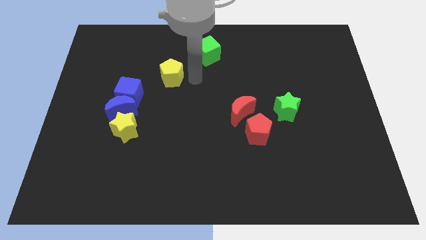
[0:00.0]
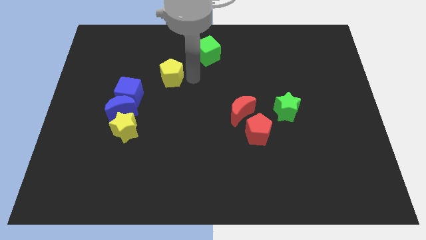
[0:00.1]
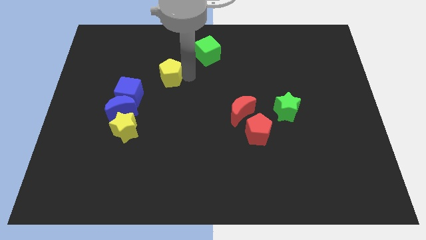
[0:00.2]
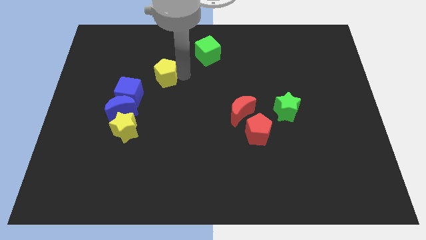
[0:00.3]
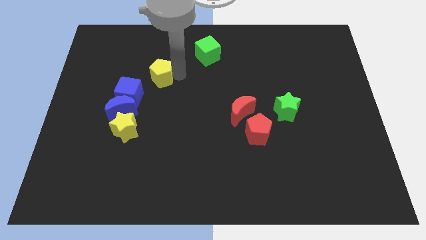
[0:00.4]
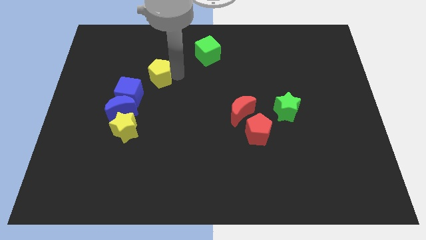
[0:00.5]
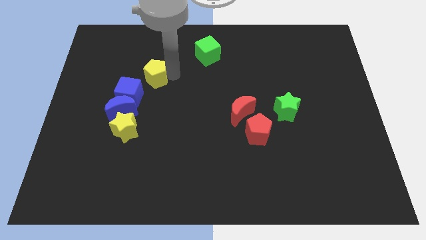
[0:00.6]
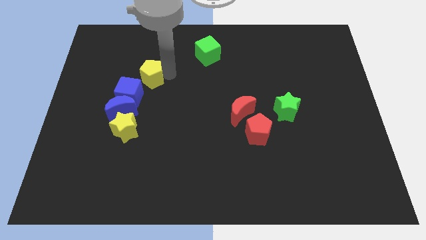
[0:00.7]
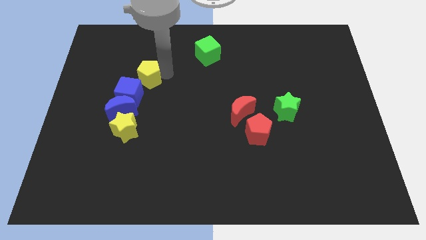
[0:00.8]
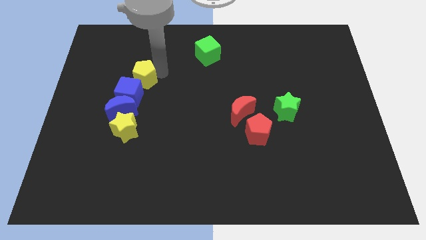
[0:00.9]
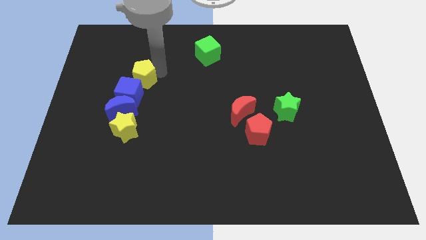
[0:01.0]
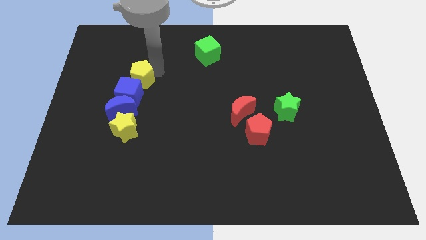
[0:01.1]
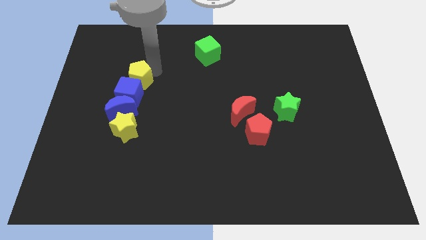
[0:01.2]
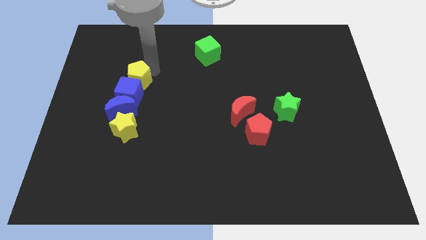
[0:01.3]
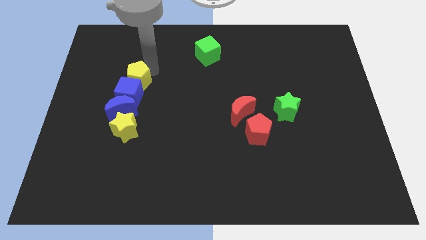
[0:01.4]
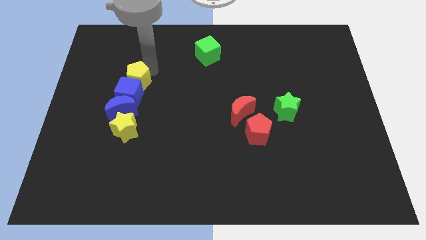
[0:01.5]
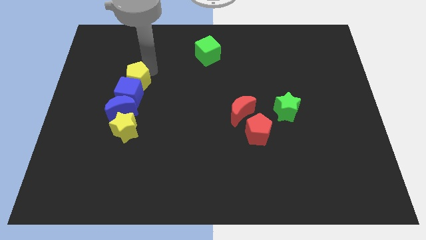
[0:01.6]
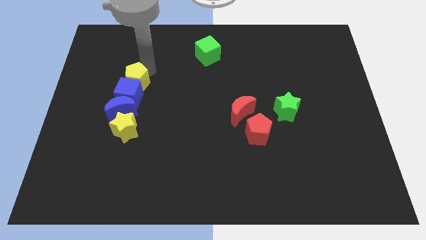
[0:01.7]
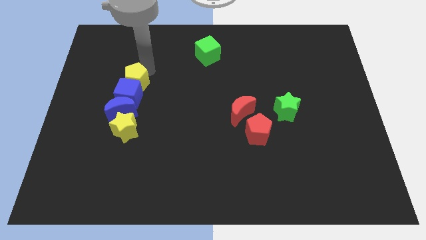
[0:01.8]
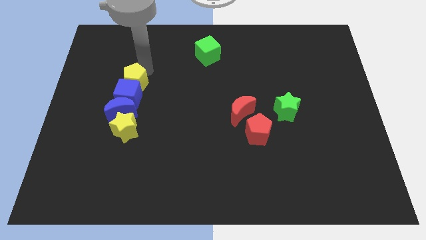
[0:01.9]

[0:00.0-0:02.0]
move the yellow pentagon into the top of the blue cube

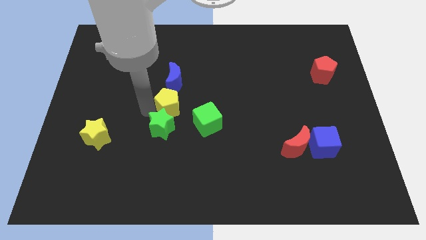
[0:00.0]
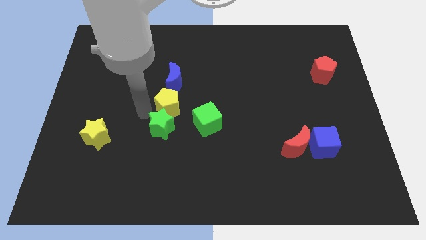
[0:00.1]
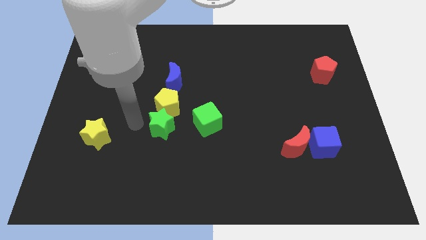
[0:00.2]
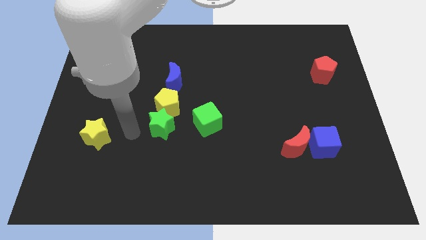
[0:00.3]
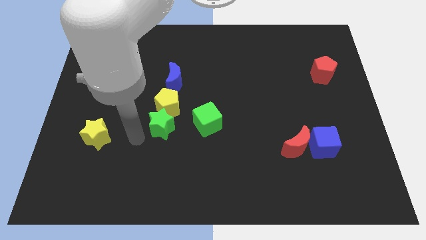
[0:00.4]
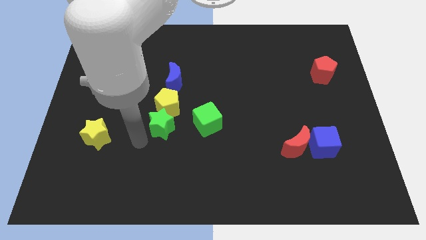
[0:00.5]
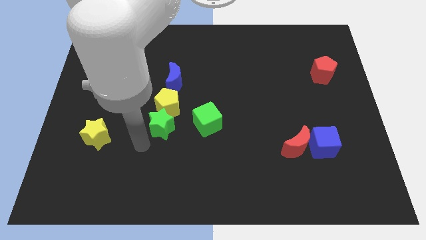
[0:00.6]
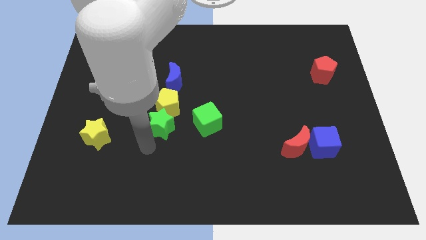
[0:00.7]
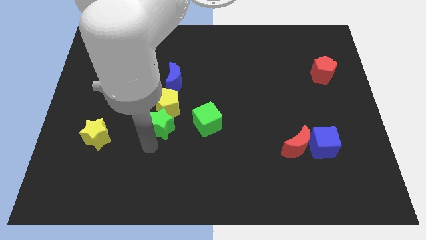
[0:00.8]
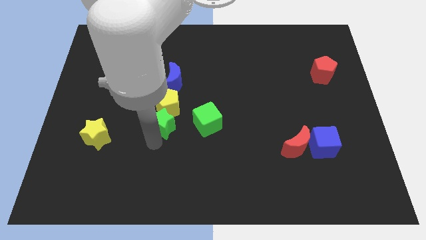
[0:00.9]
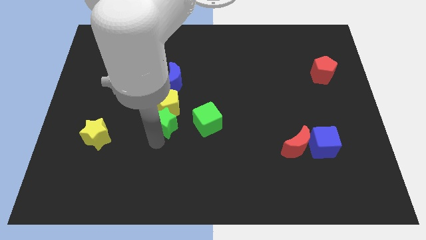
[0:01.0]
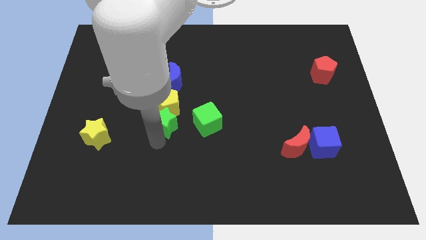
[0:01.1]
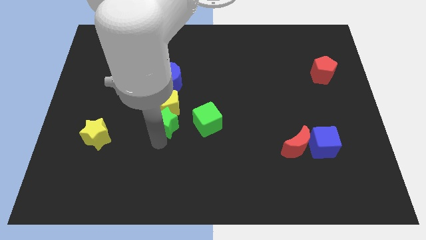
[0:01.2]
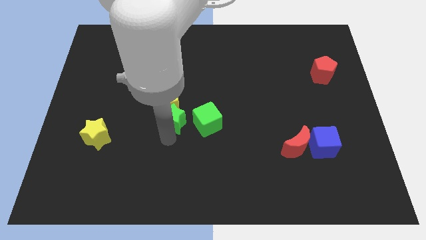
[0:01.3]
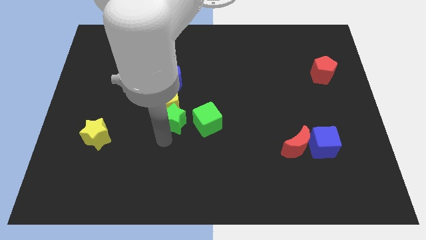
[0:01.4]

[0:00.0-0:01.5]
push the green star up a bit

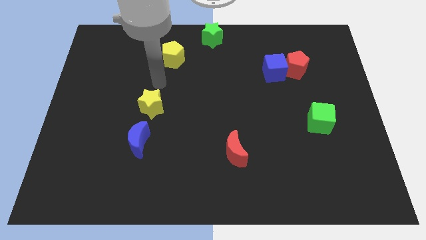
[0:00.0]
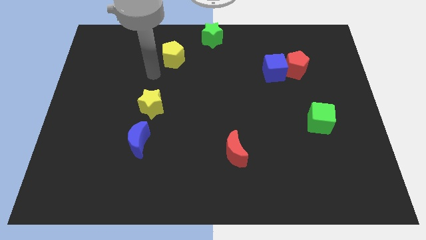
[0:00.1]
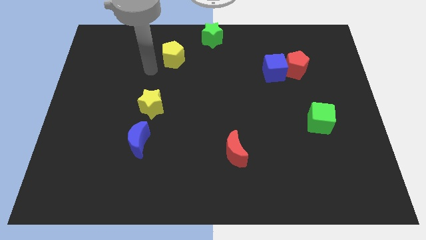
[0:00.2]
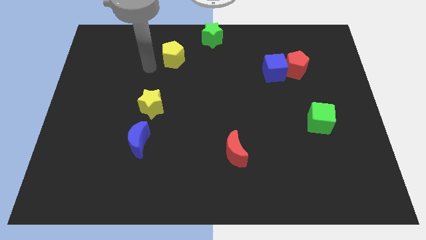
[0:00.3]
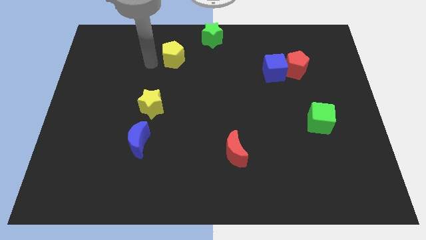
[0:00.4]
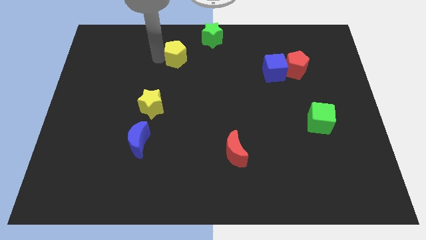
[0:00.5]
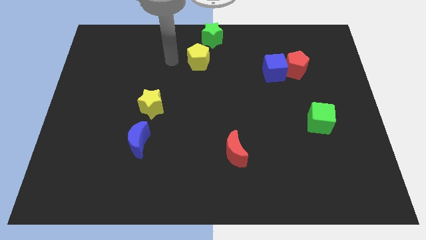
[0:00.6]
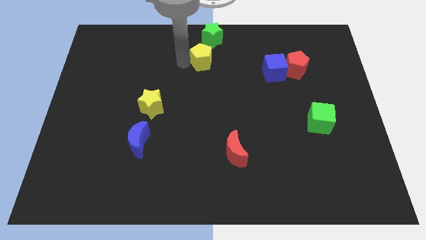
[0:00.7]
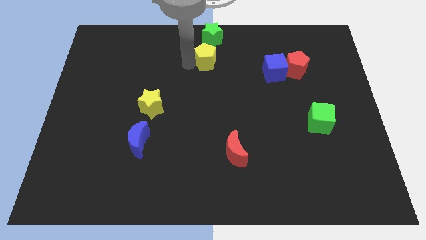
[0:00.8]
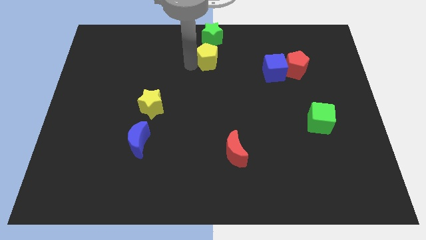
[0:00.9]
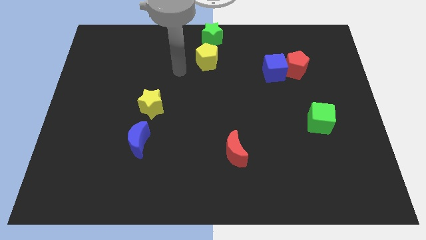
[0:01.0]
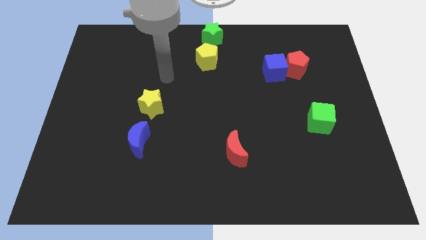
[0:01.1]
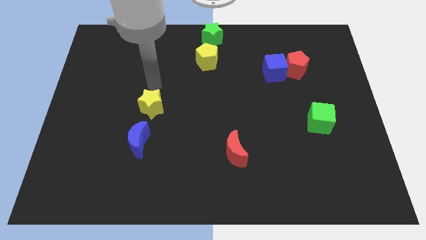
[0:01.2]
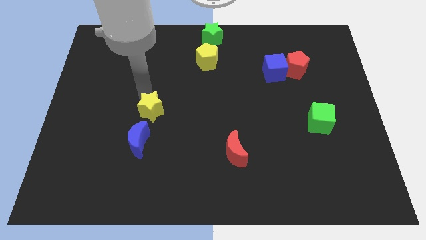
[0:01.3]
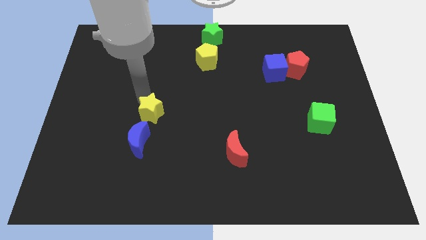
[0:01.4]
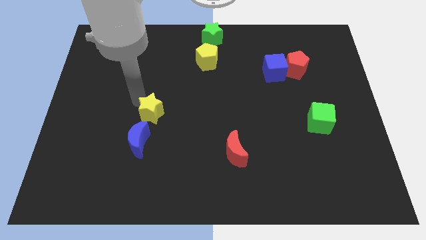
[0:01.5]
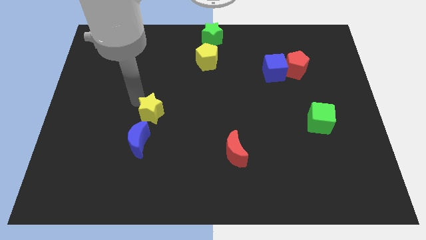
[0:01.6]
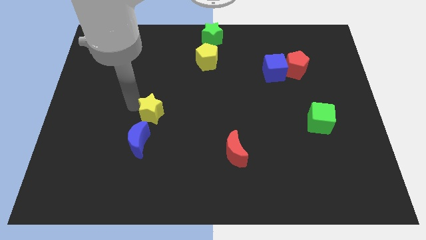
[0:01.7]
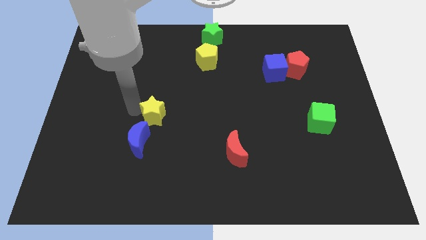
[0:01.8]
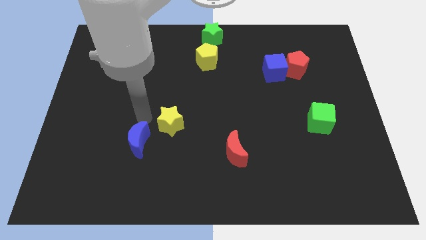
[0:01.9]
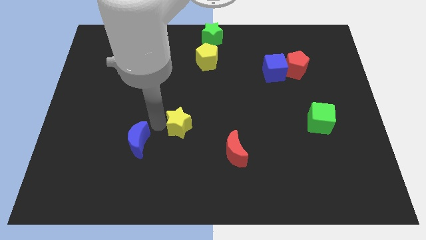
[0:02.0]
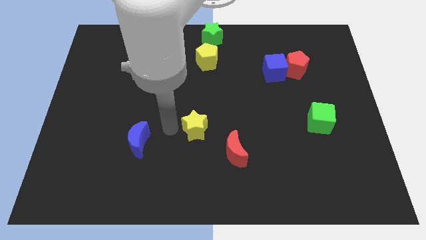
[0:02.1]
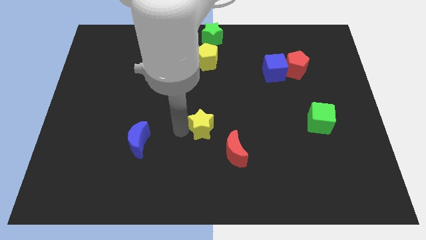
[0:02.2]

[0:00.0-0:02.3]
push the yellow pentagon to the bottom of the green star

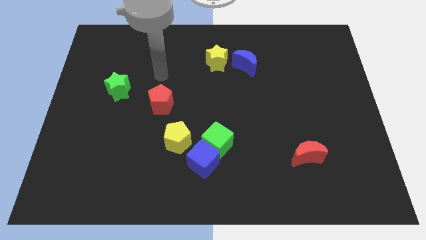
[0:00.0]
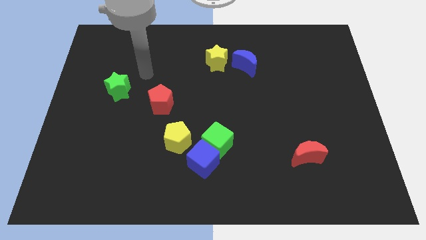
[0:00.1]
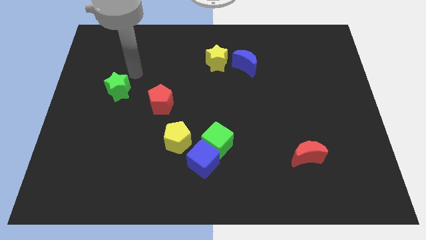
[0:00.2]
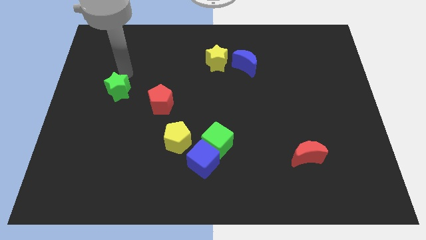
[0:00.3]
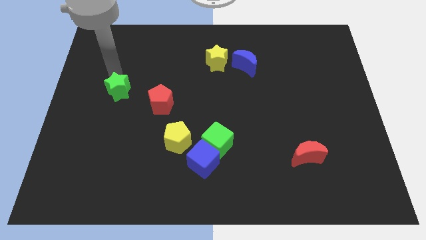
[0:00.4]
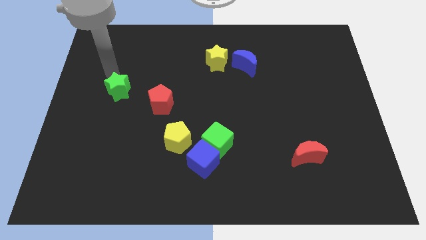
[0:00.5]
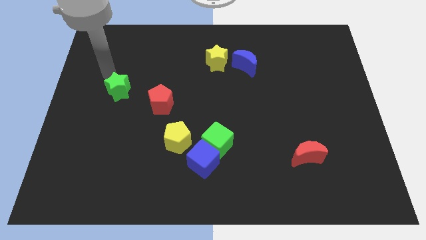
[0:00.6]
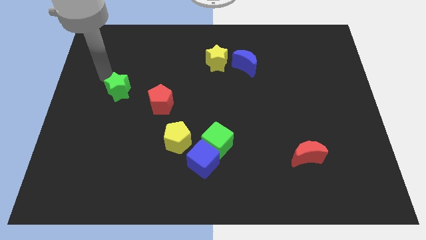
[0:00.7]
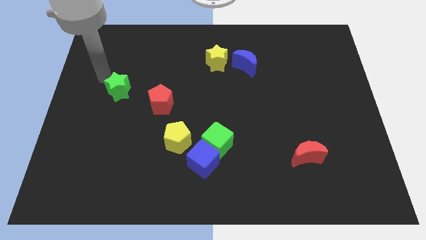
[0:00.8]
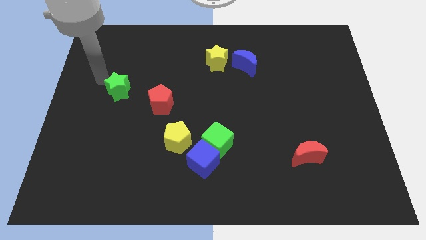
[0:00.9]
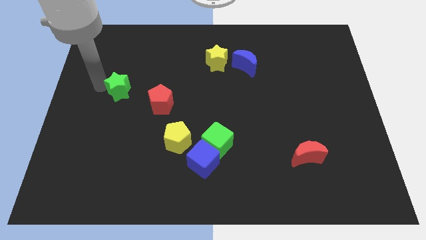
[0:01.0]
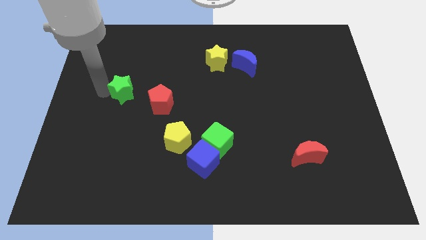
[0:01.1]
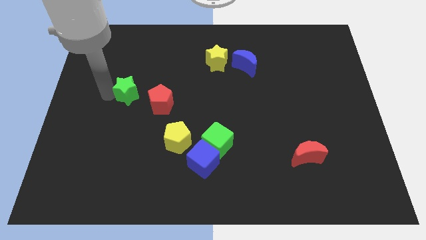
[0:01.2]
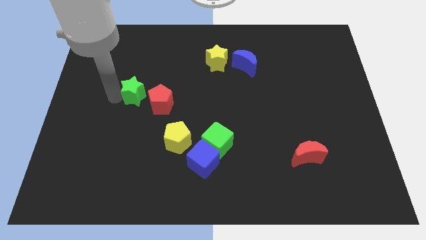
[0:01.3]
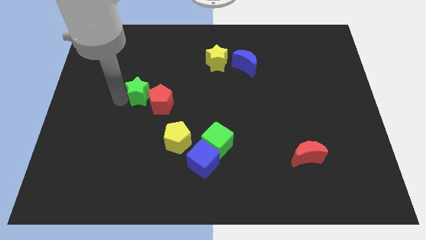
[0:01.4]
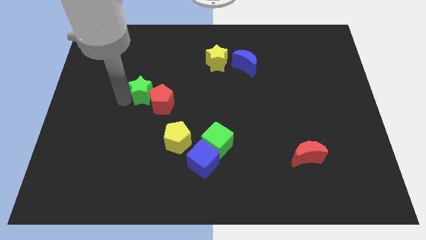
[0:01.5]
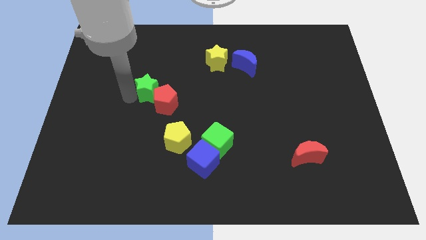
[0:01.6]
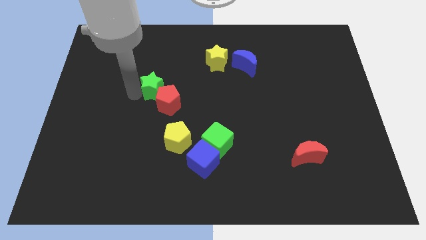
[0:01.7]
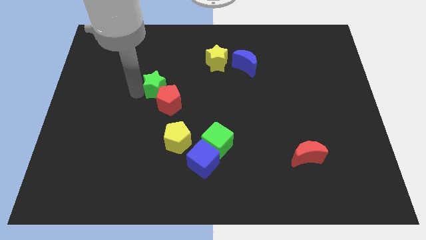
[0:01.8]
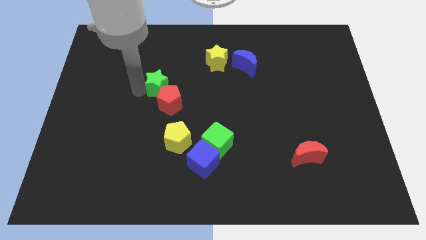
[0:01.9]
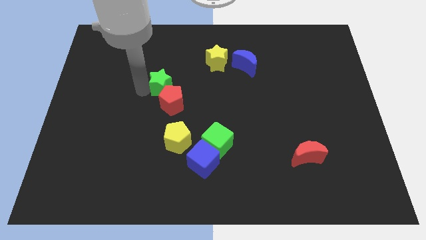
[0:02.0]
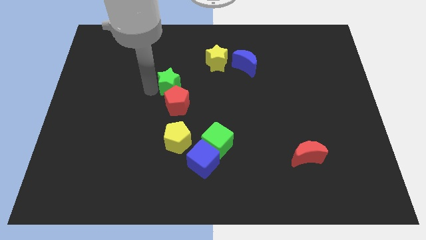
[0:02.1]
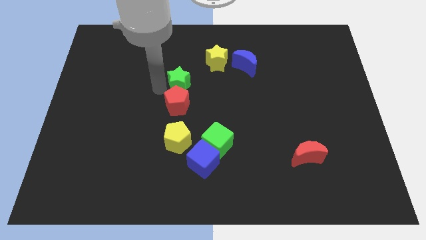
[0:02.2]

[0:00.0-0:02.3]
move green star to the top of red pentagon

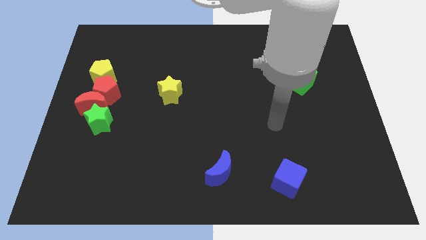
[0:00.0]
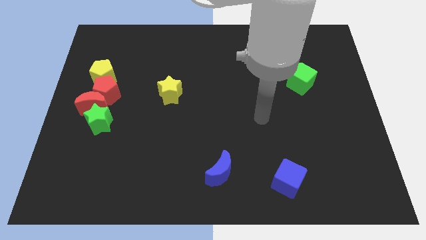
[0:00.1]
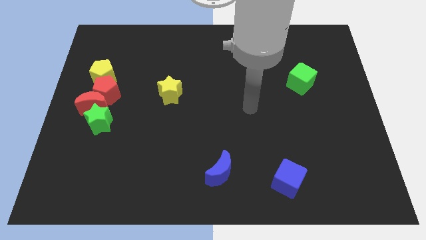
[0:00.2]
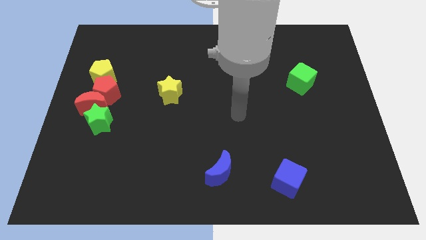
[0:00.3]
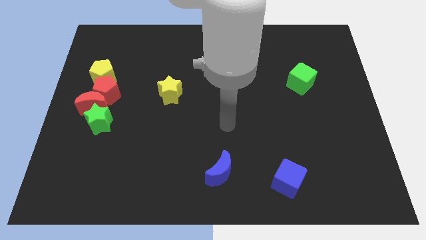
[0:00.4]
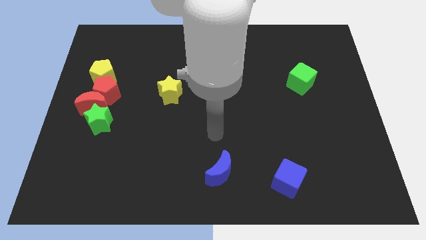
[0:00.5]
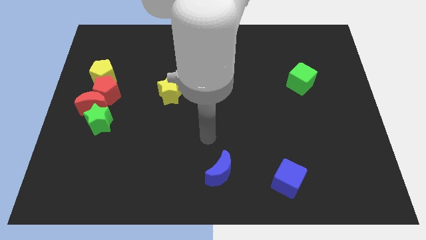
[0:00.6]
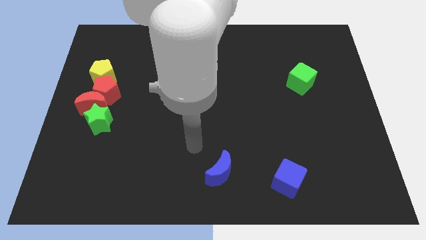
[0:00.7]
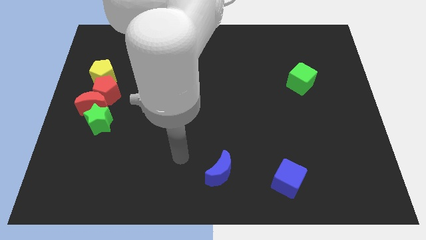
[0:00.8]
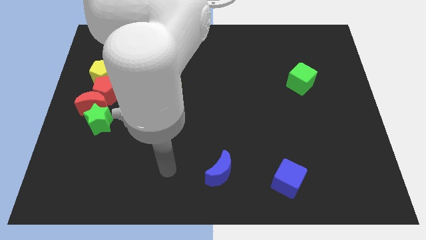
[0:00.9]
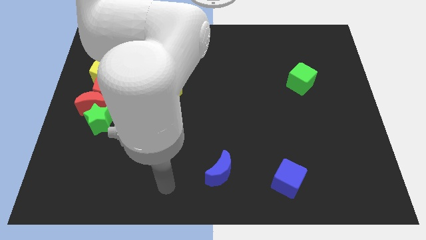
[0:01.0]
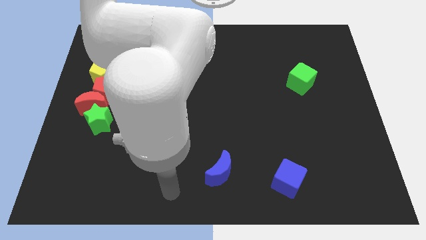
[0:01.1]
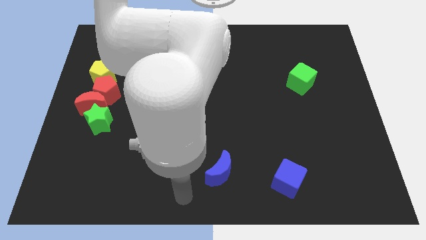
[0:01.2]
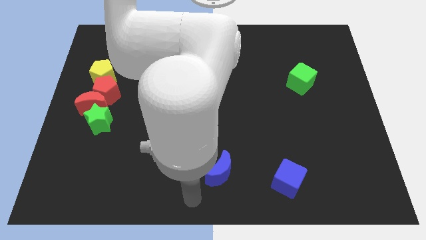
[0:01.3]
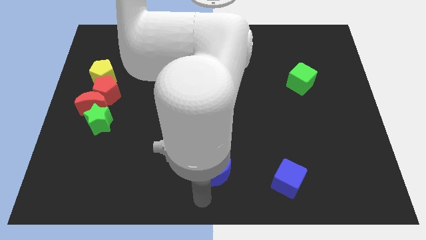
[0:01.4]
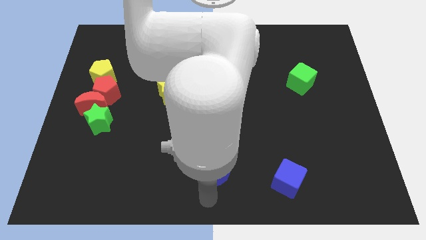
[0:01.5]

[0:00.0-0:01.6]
move arm to the bottom of blue crescent
